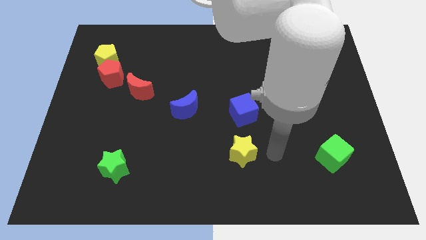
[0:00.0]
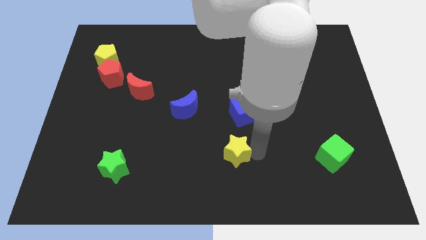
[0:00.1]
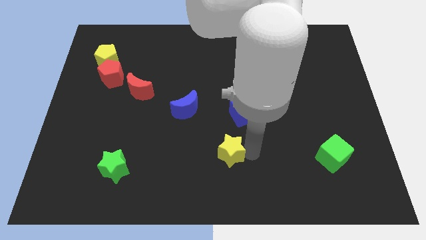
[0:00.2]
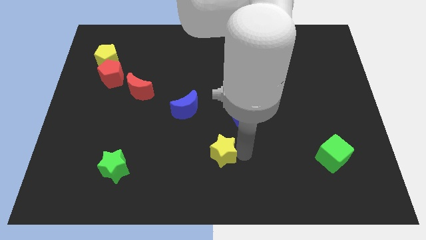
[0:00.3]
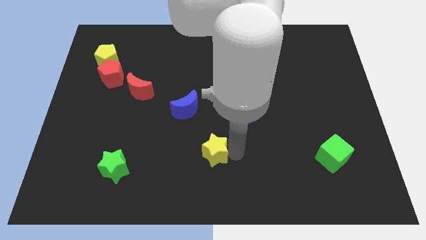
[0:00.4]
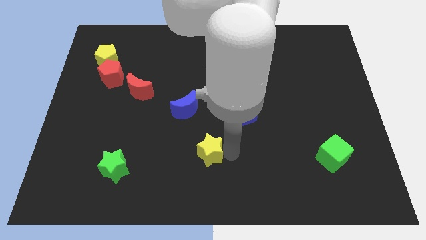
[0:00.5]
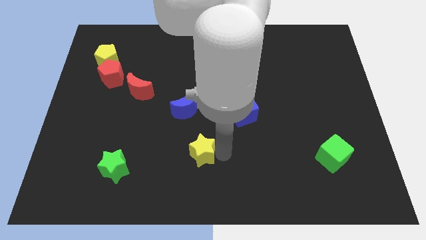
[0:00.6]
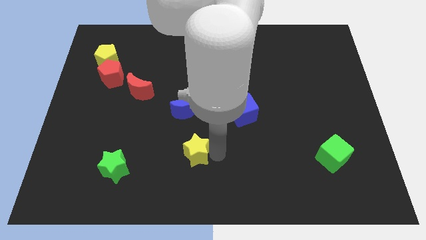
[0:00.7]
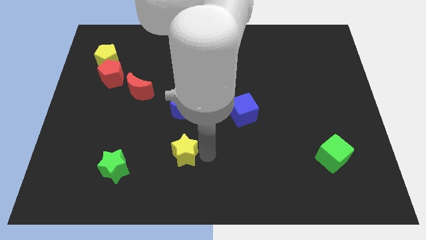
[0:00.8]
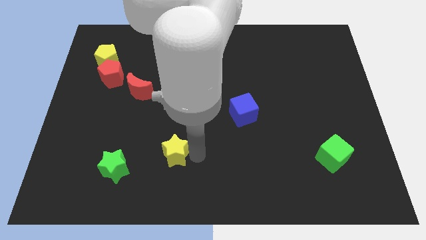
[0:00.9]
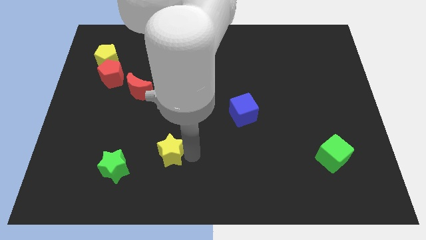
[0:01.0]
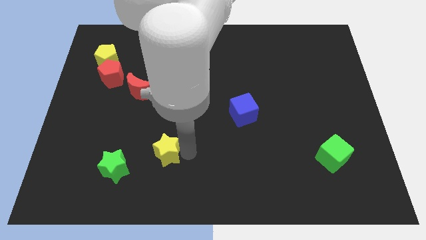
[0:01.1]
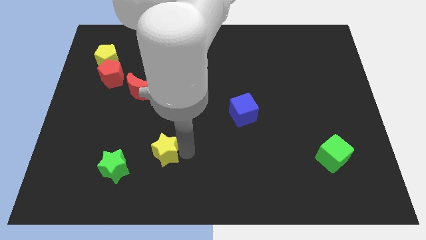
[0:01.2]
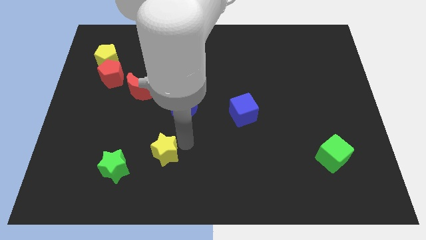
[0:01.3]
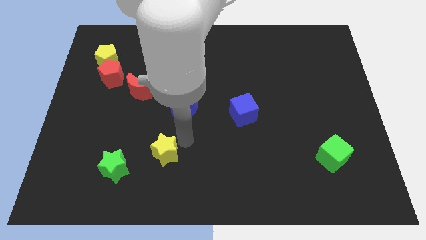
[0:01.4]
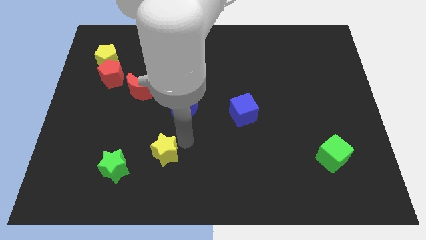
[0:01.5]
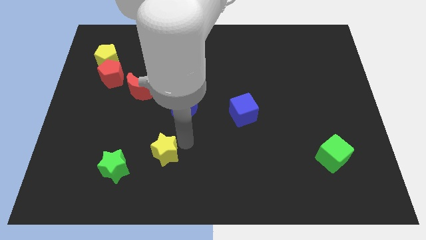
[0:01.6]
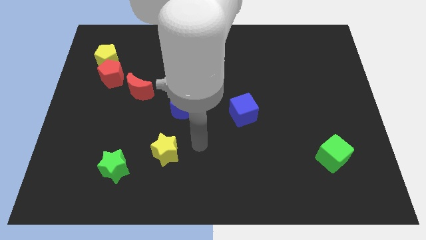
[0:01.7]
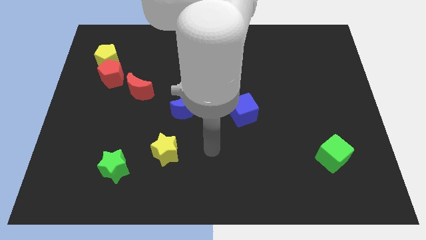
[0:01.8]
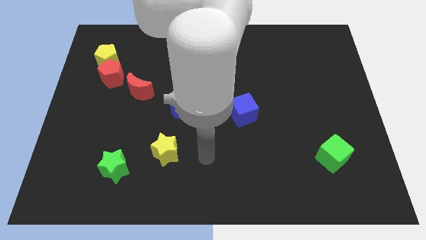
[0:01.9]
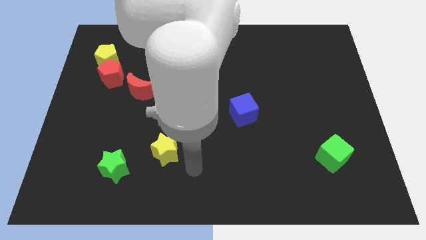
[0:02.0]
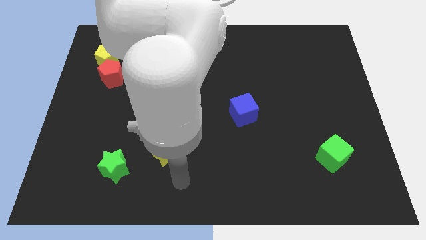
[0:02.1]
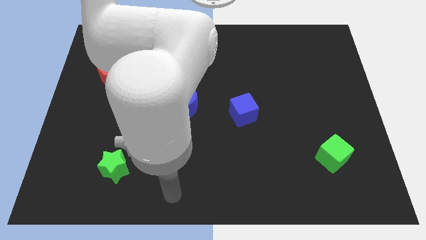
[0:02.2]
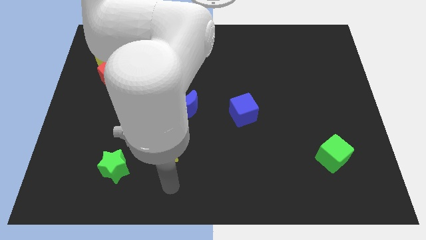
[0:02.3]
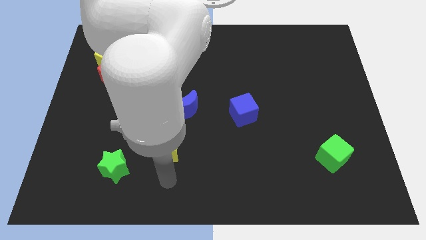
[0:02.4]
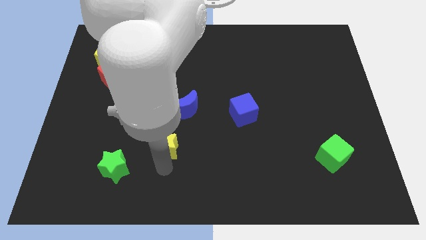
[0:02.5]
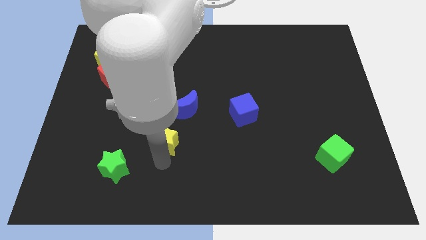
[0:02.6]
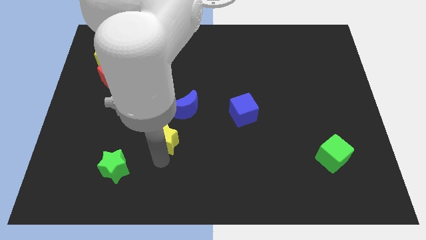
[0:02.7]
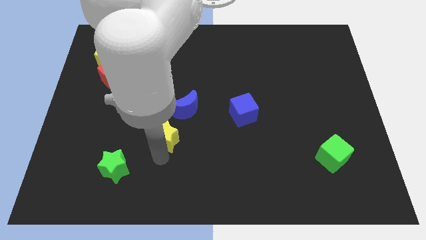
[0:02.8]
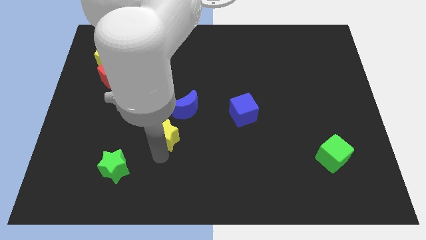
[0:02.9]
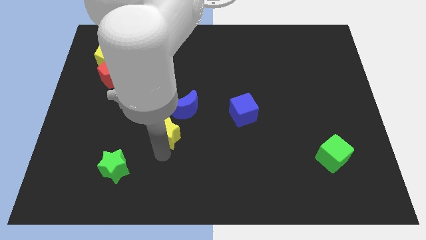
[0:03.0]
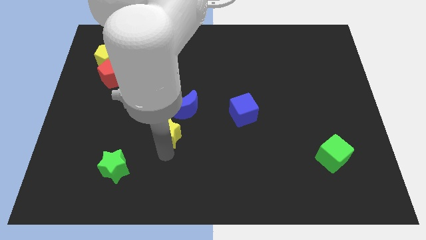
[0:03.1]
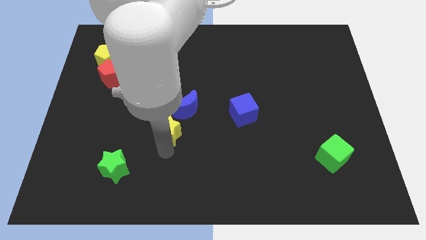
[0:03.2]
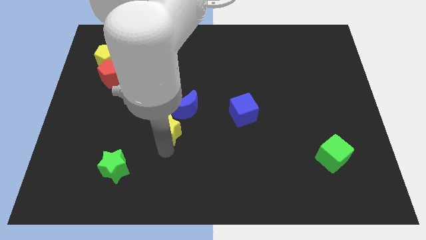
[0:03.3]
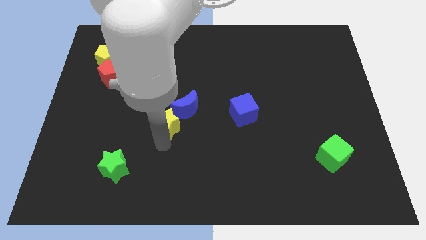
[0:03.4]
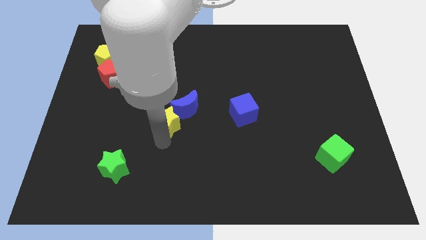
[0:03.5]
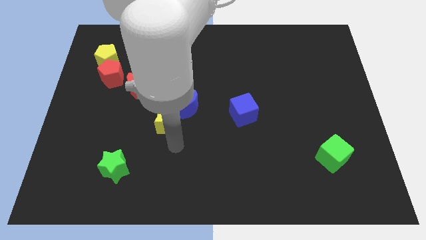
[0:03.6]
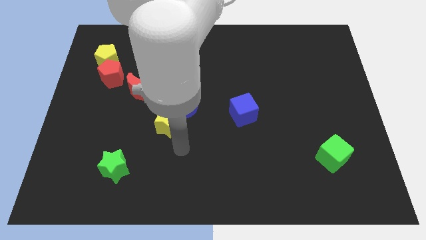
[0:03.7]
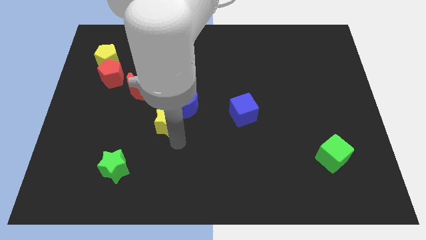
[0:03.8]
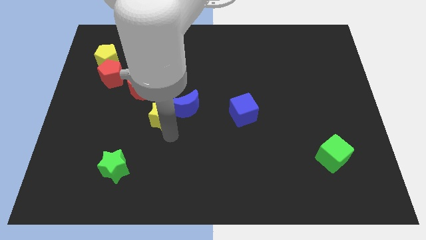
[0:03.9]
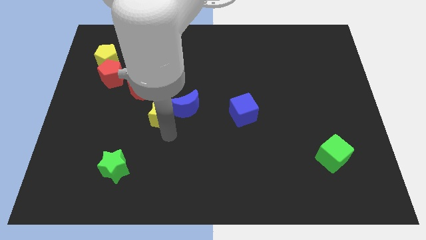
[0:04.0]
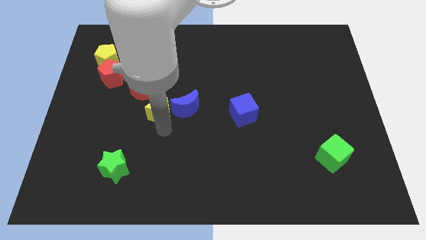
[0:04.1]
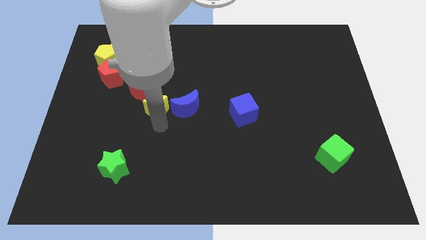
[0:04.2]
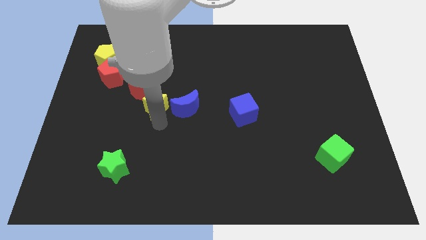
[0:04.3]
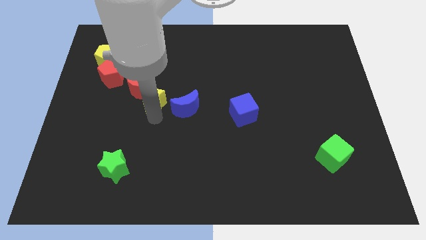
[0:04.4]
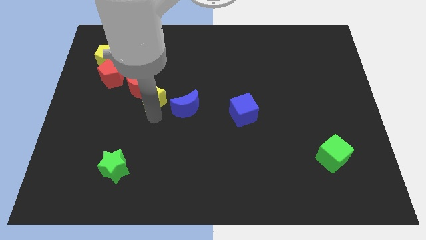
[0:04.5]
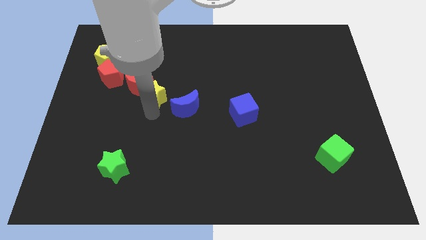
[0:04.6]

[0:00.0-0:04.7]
move the yellow star into the red moon

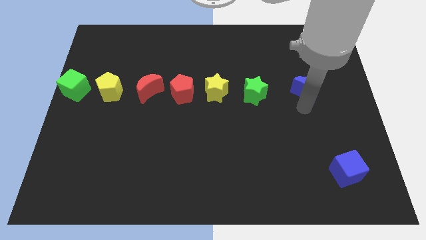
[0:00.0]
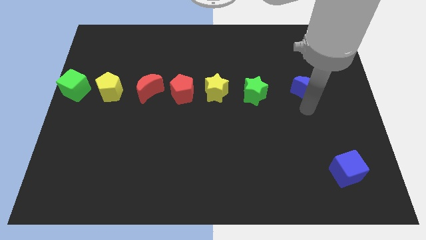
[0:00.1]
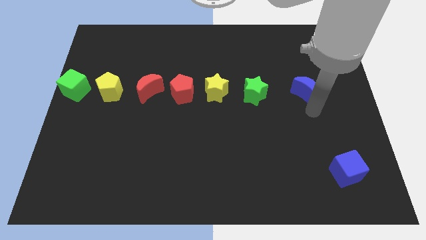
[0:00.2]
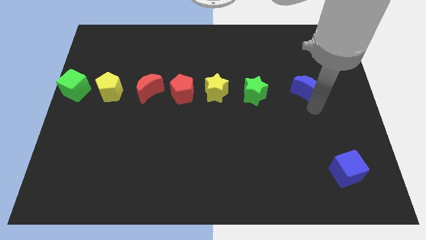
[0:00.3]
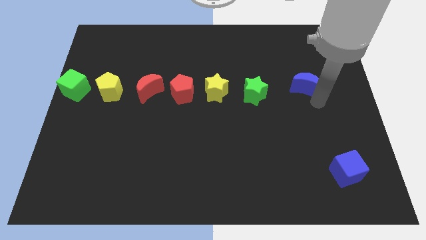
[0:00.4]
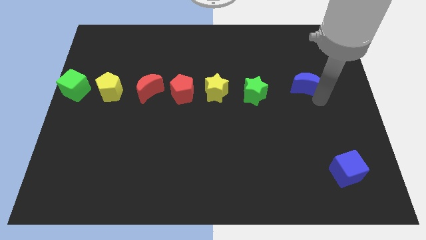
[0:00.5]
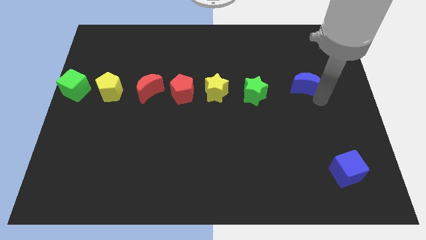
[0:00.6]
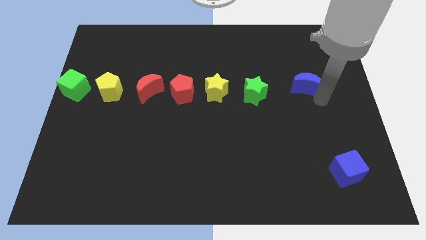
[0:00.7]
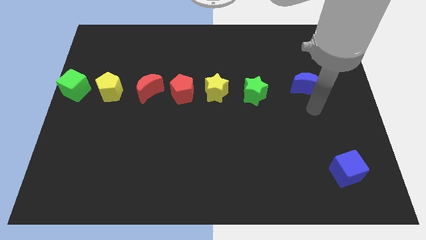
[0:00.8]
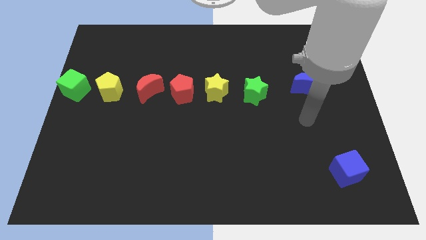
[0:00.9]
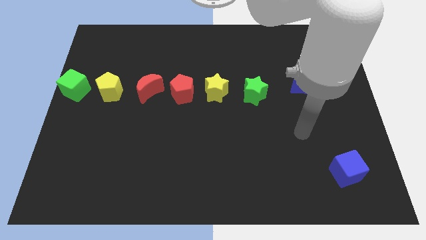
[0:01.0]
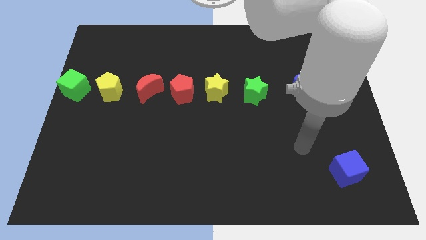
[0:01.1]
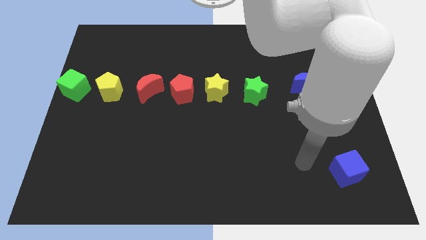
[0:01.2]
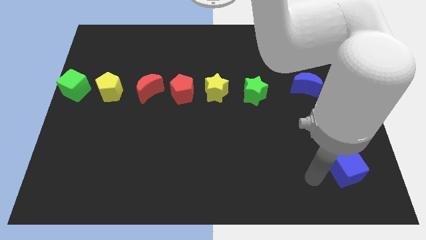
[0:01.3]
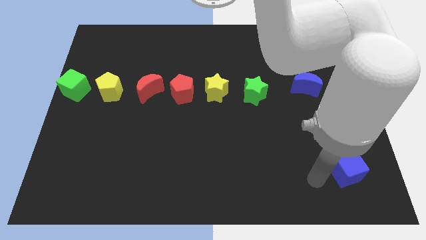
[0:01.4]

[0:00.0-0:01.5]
move the blue moon slightly upwards

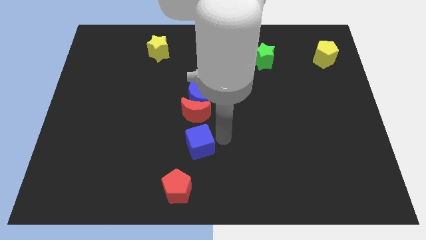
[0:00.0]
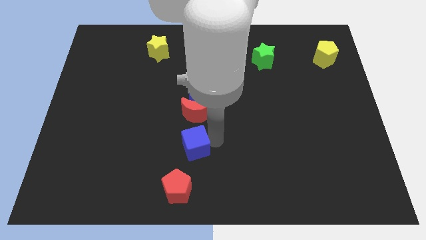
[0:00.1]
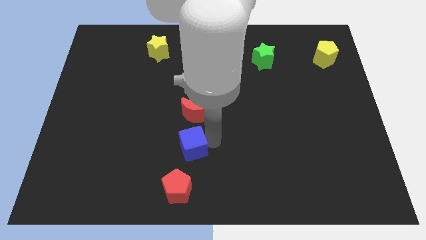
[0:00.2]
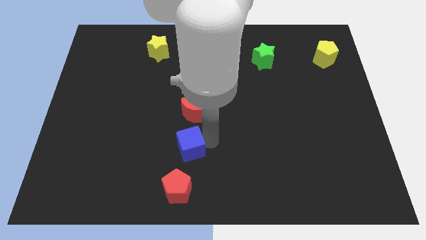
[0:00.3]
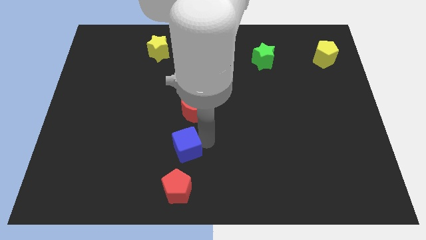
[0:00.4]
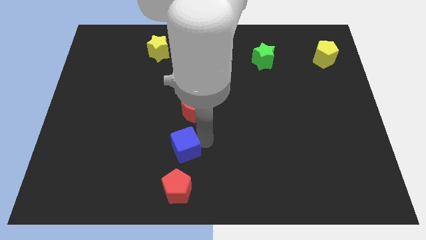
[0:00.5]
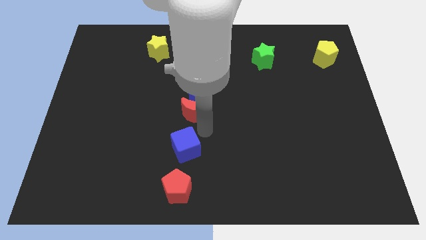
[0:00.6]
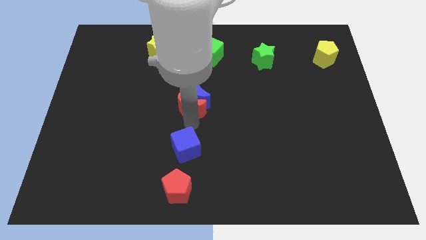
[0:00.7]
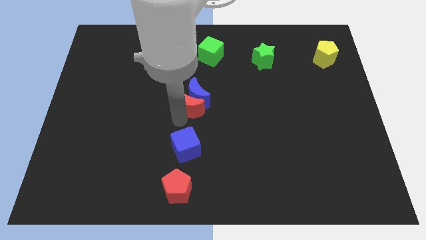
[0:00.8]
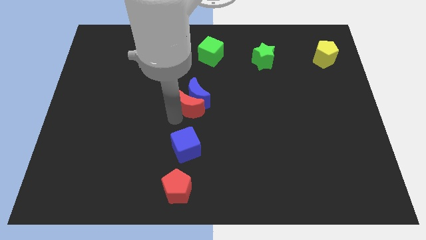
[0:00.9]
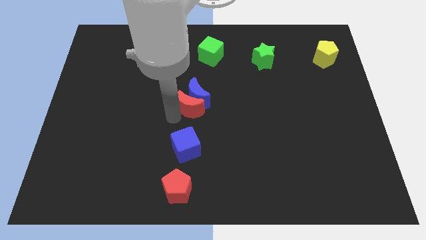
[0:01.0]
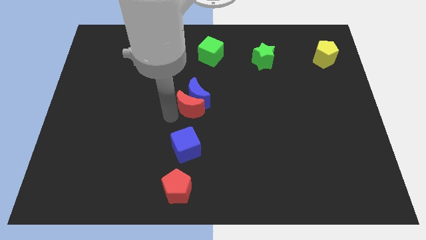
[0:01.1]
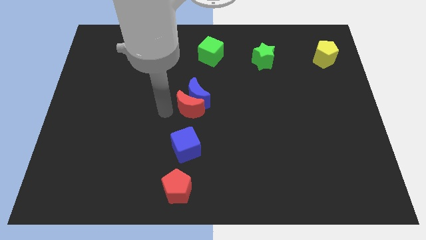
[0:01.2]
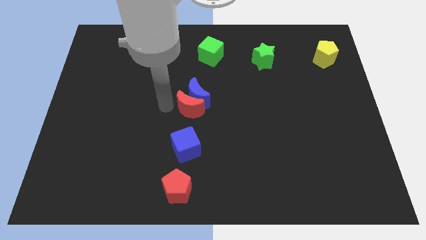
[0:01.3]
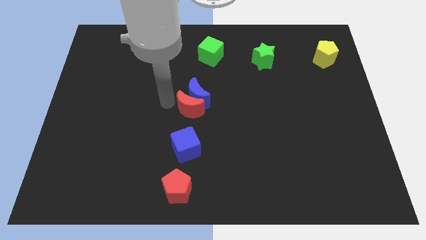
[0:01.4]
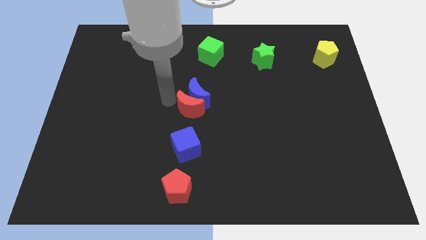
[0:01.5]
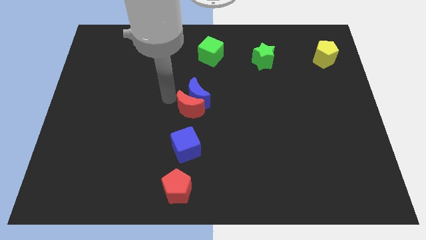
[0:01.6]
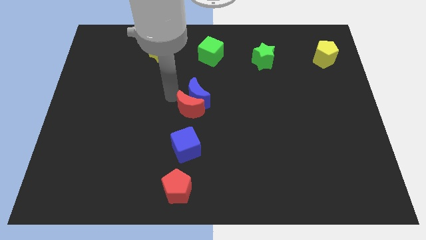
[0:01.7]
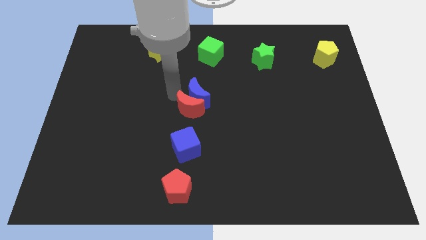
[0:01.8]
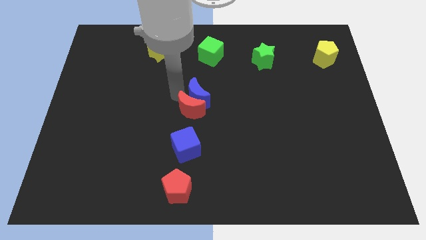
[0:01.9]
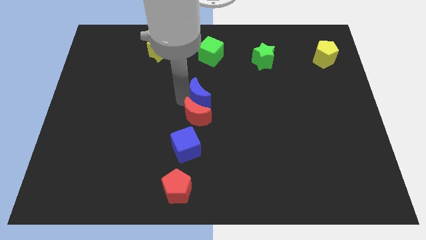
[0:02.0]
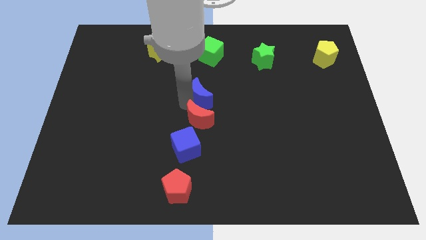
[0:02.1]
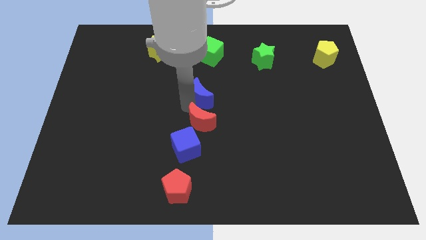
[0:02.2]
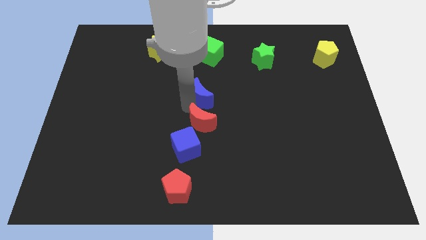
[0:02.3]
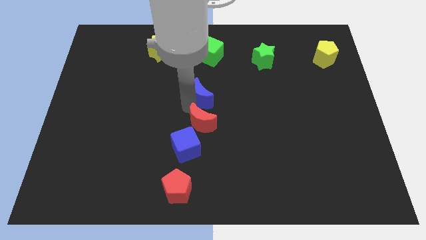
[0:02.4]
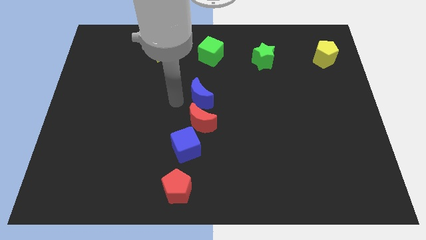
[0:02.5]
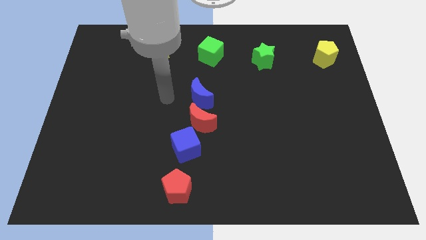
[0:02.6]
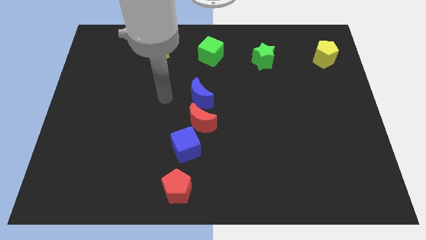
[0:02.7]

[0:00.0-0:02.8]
place red moon to the top right of blue cube
